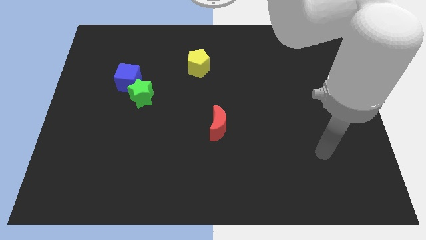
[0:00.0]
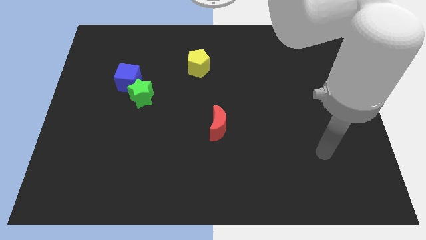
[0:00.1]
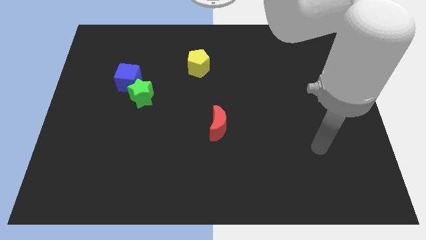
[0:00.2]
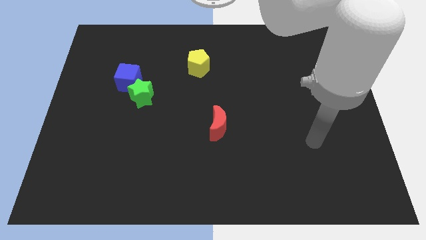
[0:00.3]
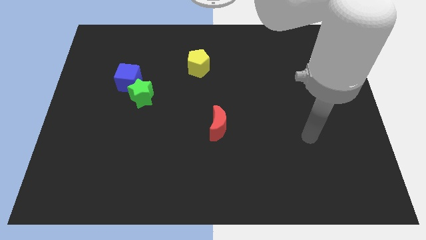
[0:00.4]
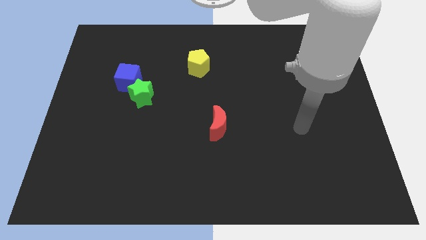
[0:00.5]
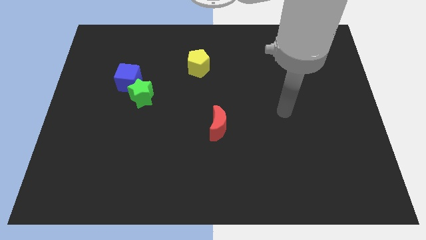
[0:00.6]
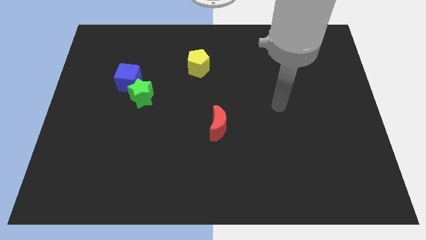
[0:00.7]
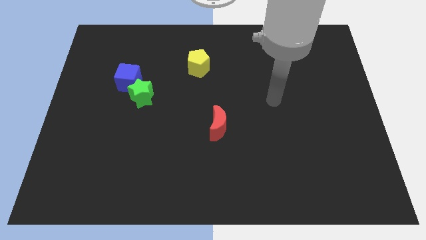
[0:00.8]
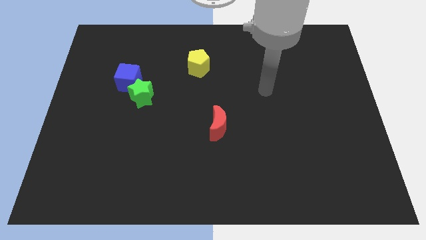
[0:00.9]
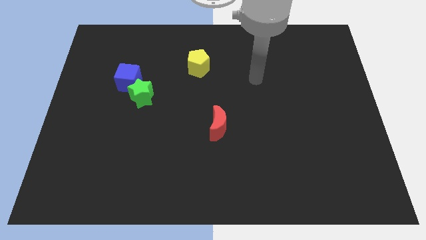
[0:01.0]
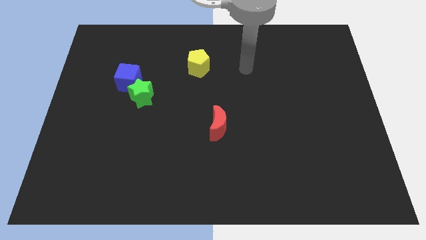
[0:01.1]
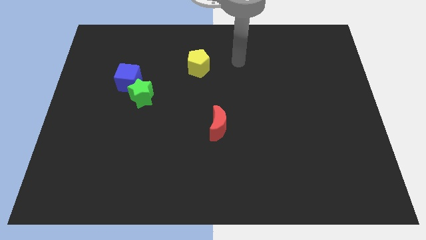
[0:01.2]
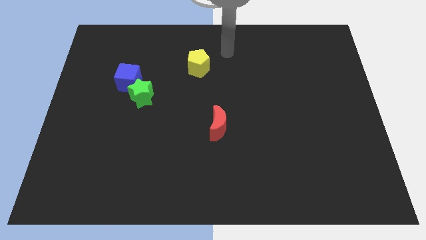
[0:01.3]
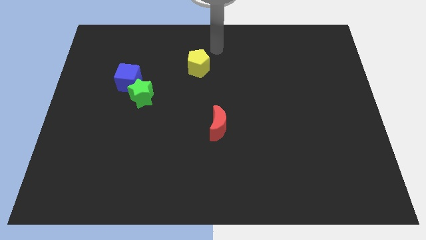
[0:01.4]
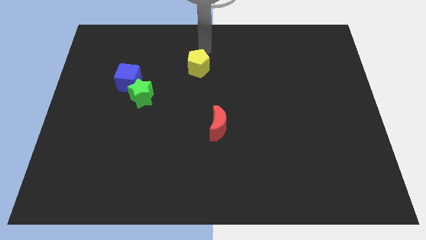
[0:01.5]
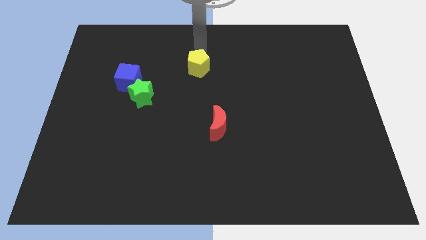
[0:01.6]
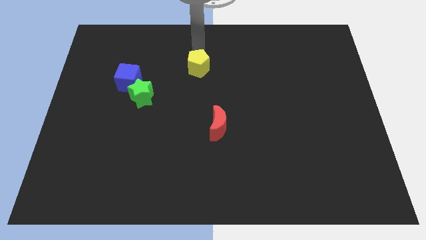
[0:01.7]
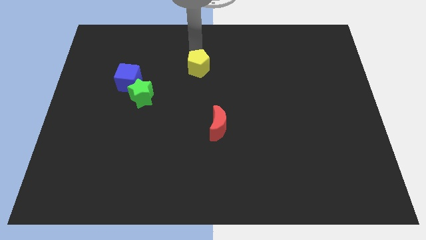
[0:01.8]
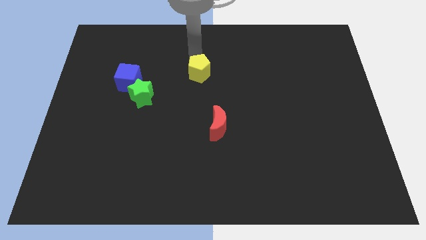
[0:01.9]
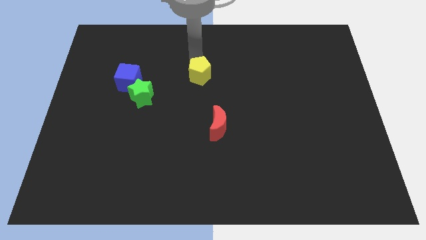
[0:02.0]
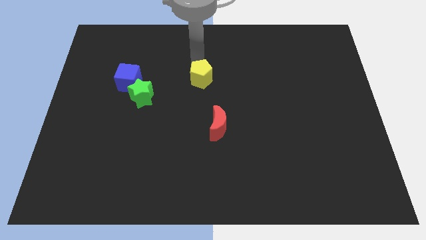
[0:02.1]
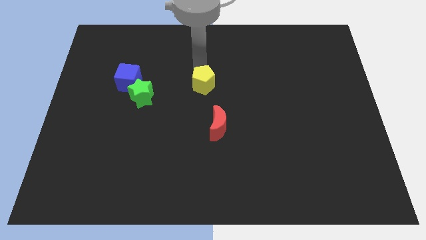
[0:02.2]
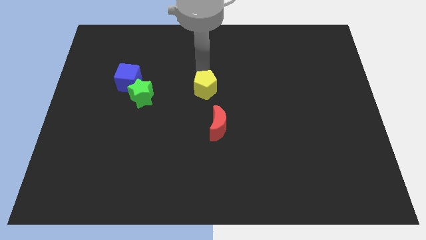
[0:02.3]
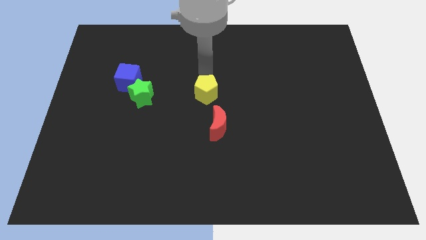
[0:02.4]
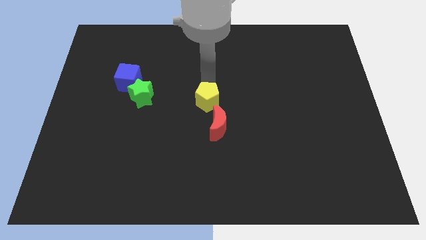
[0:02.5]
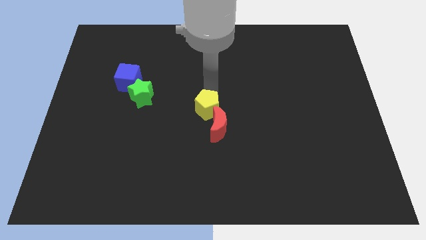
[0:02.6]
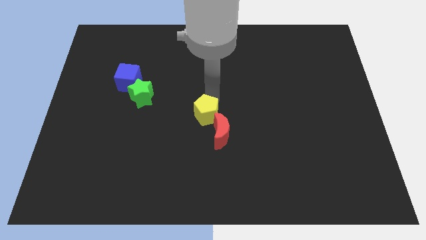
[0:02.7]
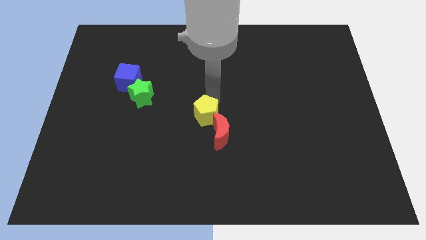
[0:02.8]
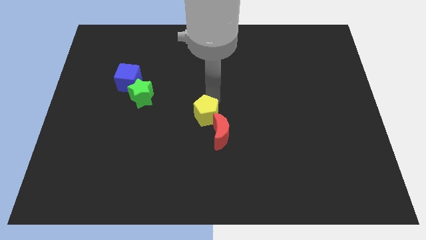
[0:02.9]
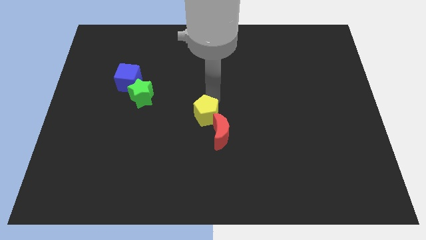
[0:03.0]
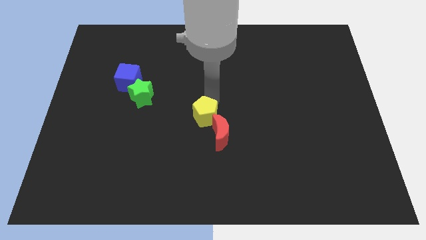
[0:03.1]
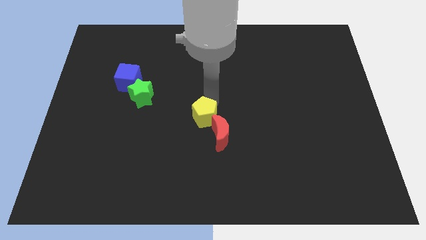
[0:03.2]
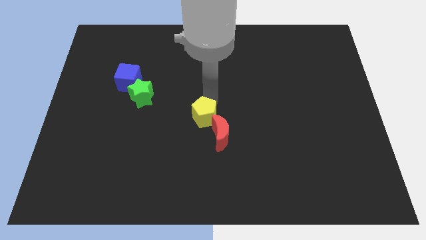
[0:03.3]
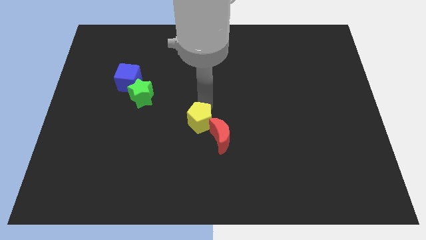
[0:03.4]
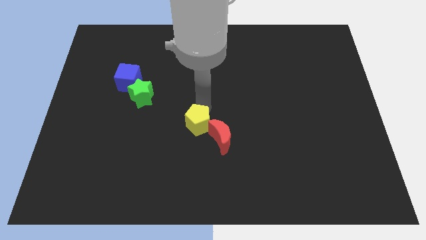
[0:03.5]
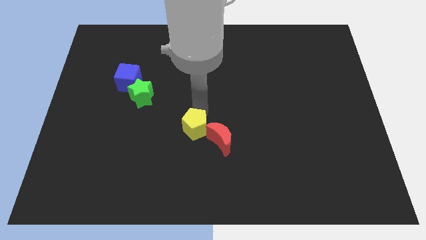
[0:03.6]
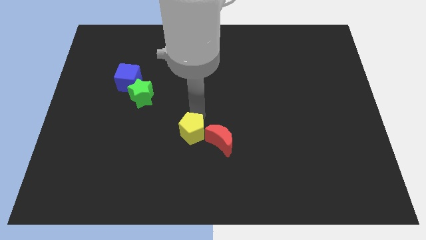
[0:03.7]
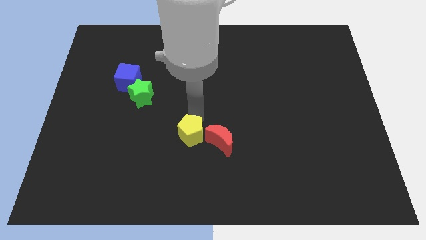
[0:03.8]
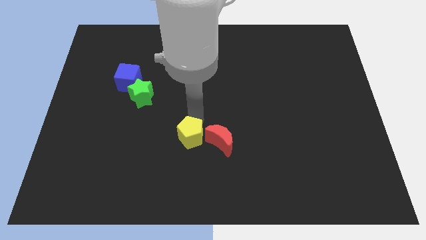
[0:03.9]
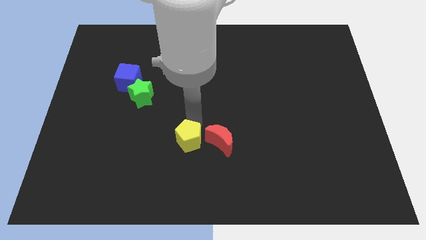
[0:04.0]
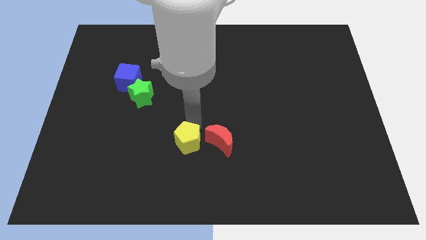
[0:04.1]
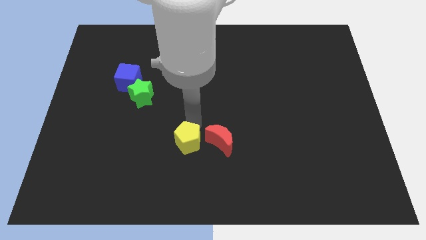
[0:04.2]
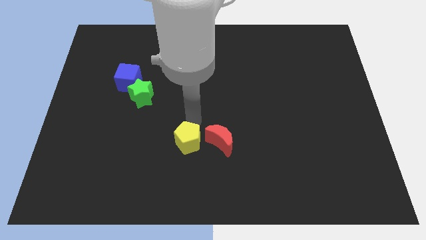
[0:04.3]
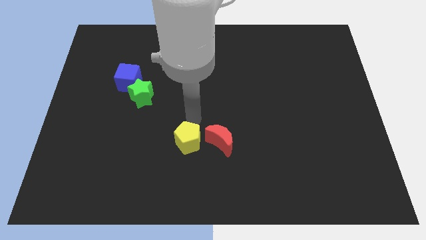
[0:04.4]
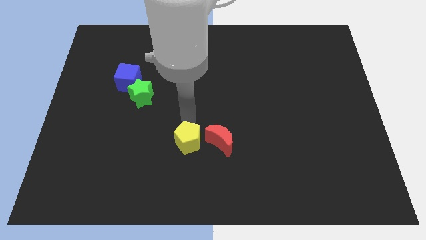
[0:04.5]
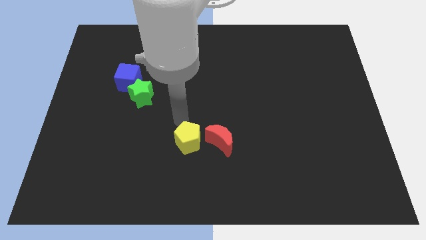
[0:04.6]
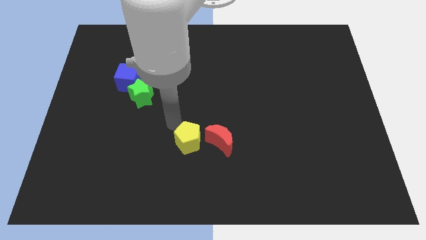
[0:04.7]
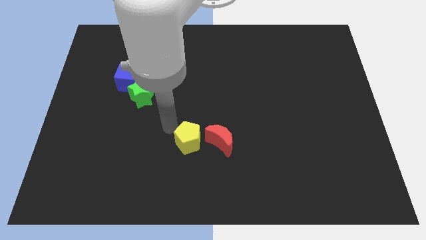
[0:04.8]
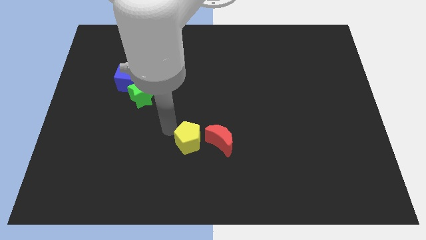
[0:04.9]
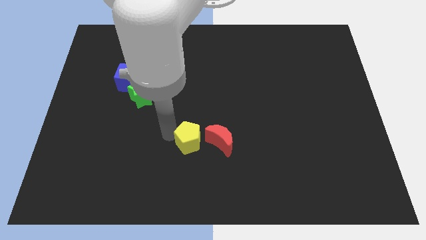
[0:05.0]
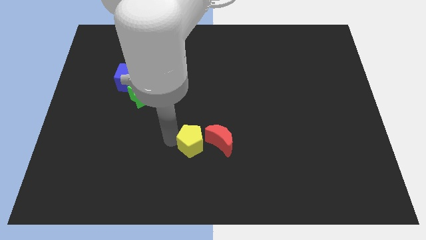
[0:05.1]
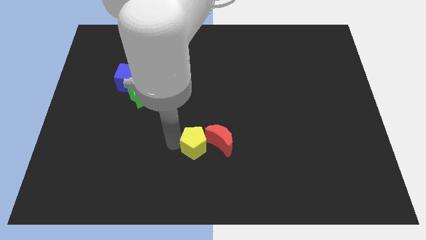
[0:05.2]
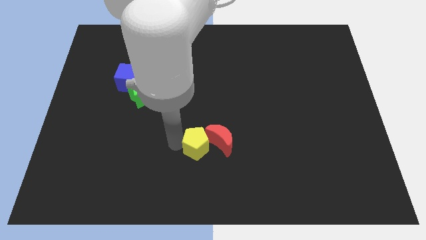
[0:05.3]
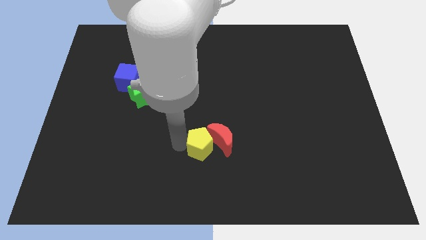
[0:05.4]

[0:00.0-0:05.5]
move the pentagon next to the moon

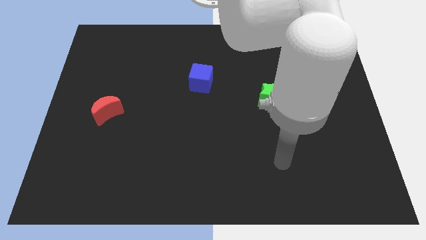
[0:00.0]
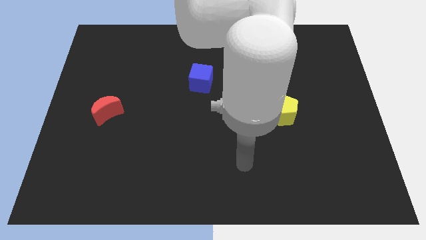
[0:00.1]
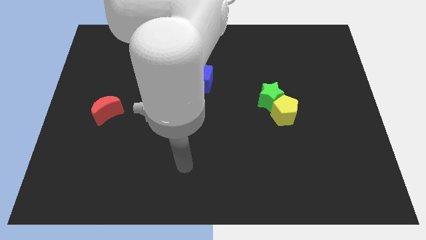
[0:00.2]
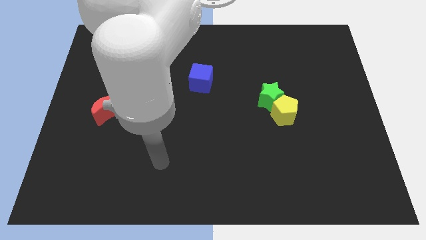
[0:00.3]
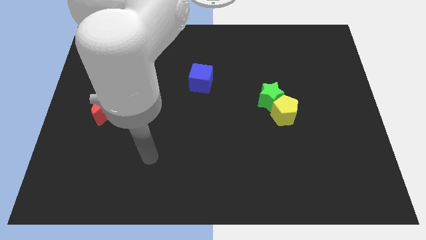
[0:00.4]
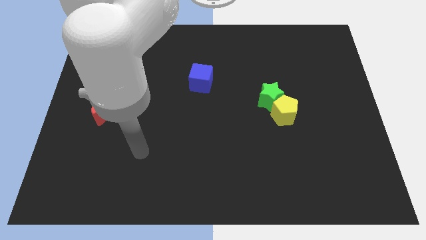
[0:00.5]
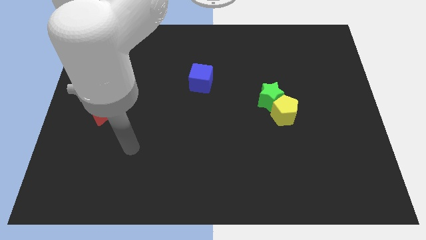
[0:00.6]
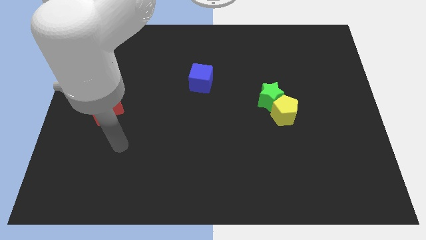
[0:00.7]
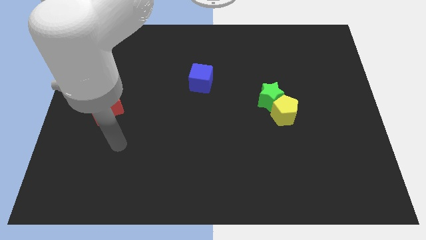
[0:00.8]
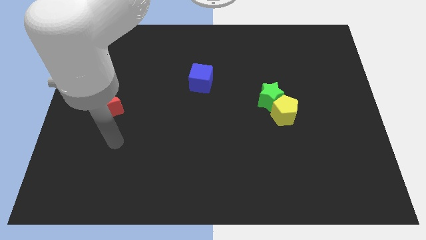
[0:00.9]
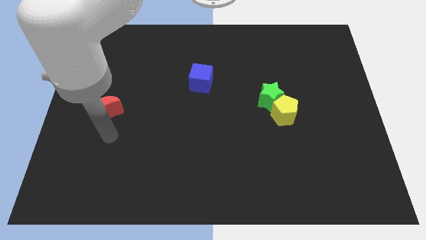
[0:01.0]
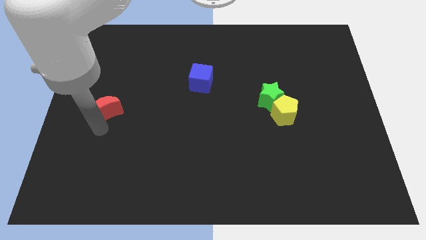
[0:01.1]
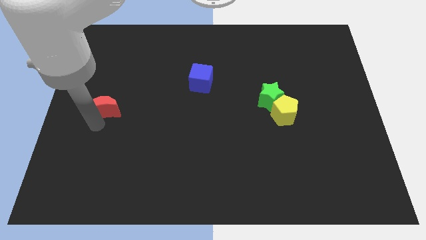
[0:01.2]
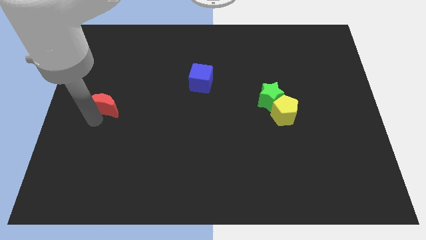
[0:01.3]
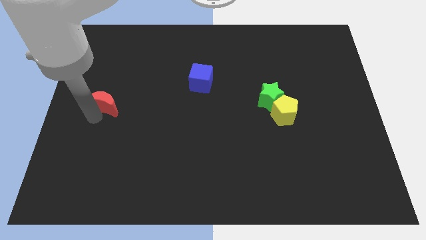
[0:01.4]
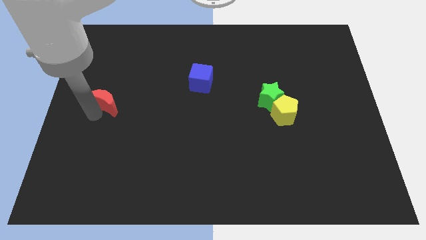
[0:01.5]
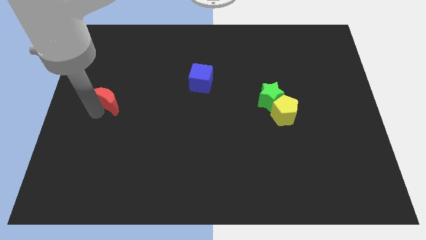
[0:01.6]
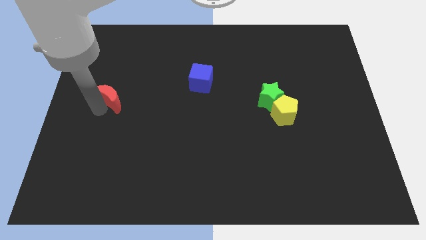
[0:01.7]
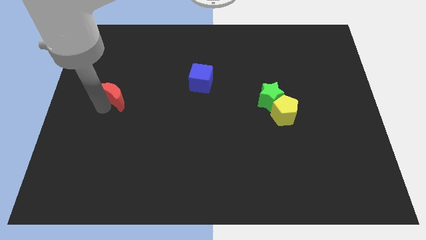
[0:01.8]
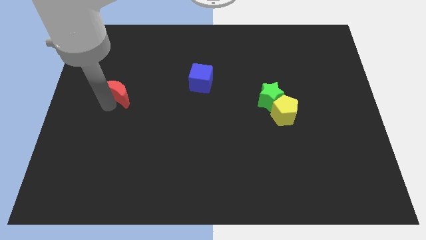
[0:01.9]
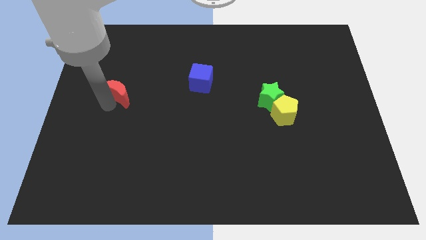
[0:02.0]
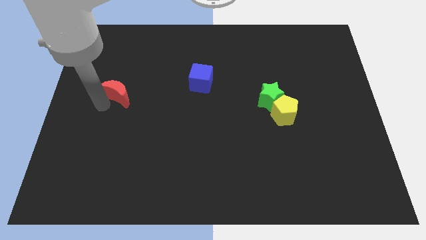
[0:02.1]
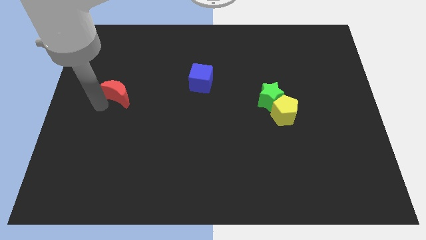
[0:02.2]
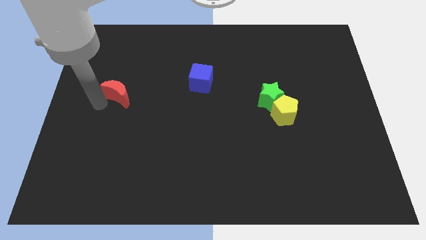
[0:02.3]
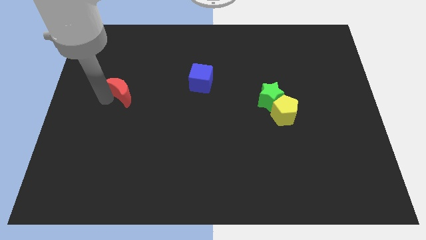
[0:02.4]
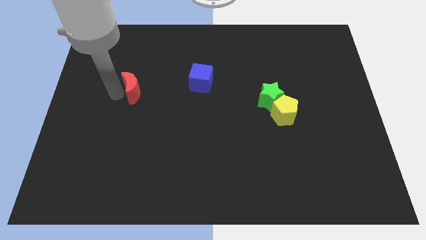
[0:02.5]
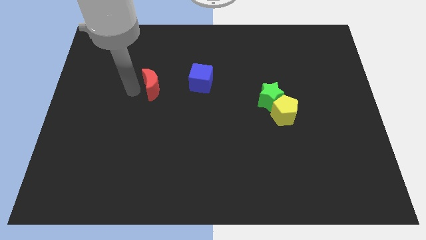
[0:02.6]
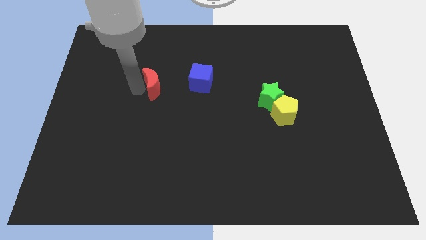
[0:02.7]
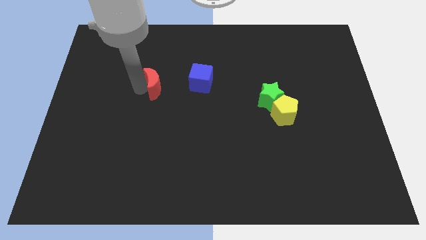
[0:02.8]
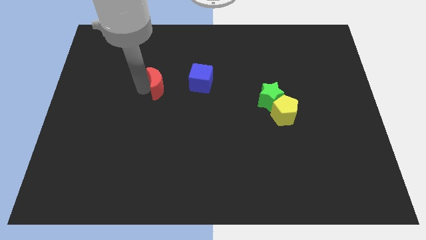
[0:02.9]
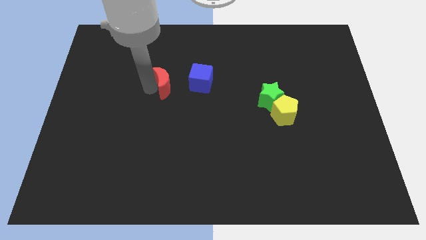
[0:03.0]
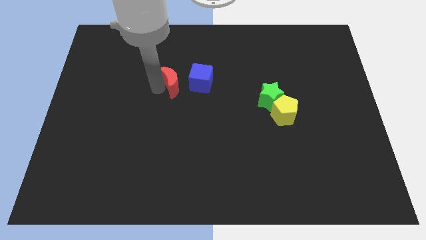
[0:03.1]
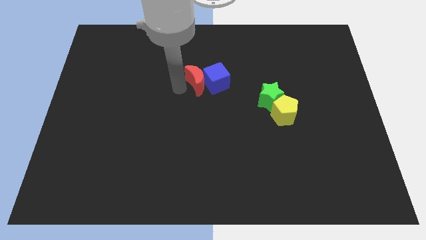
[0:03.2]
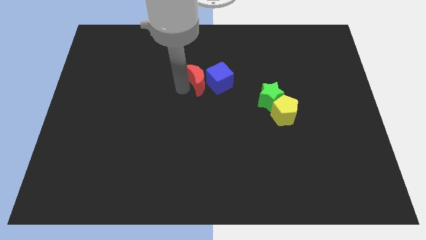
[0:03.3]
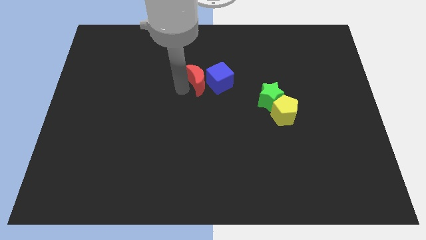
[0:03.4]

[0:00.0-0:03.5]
put the moon close to the cube
